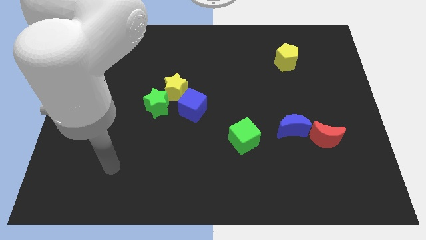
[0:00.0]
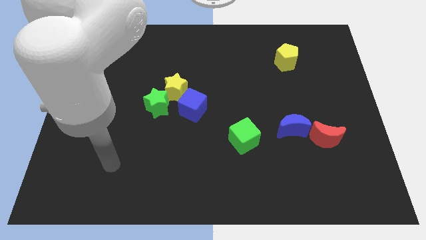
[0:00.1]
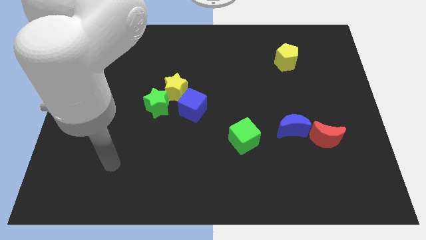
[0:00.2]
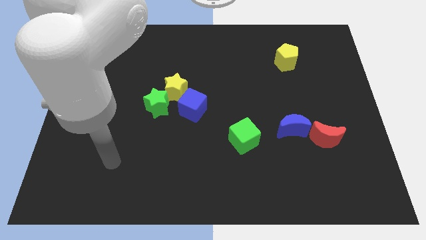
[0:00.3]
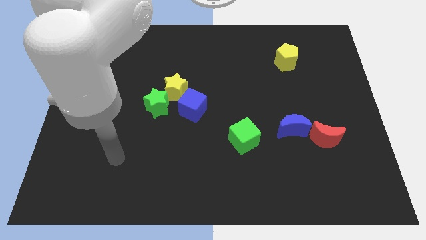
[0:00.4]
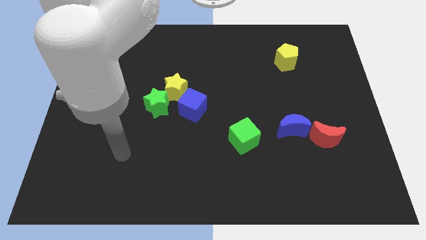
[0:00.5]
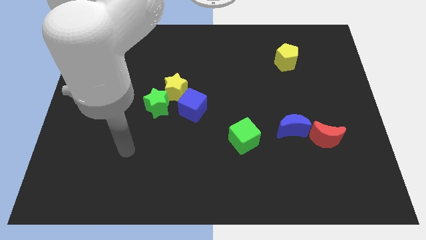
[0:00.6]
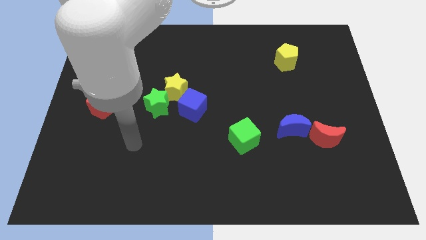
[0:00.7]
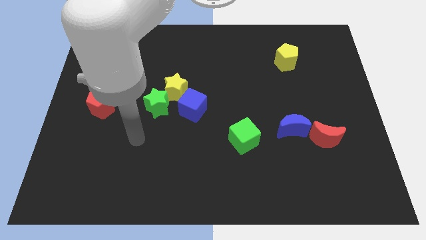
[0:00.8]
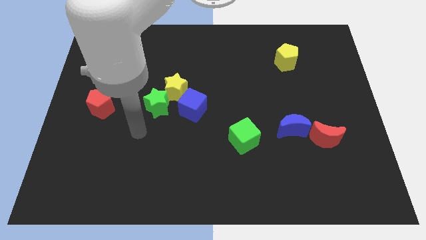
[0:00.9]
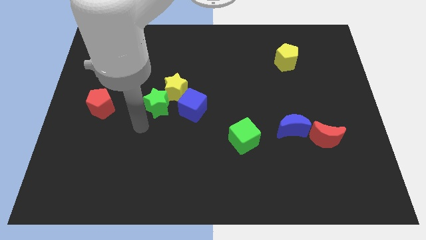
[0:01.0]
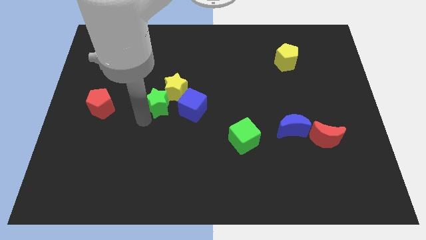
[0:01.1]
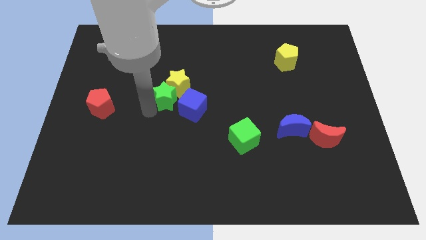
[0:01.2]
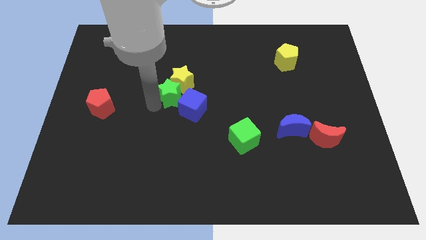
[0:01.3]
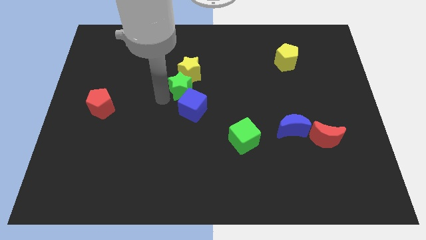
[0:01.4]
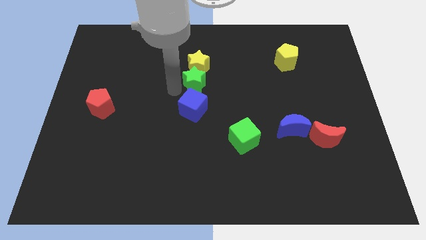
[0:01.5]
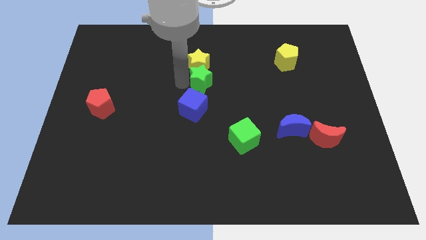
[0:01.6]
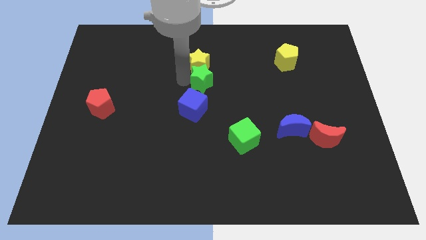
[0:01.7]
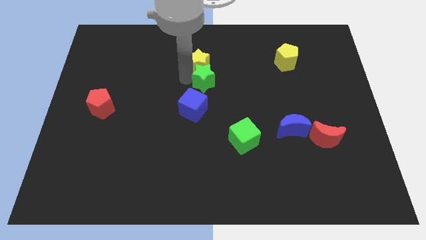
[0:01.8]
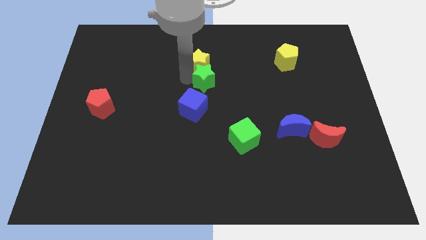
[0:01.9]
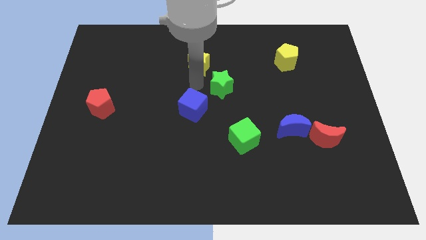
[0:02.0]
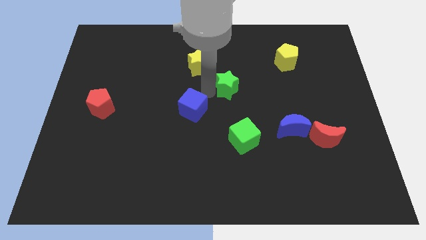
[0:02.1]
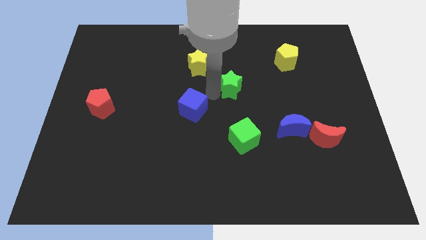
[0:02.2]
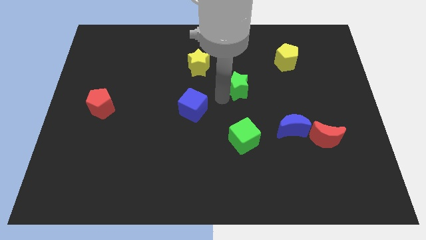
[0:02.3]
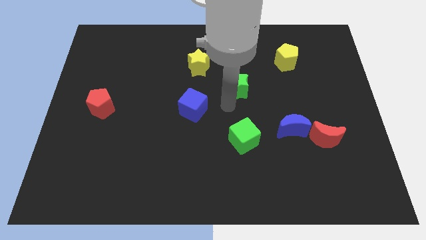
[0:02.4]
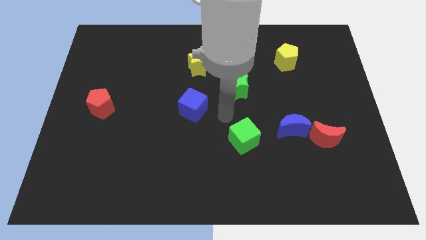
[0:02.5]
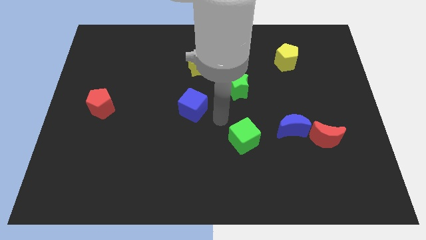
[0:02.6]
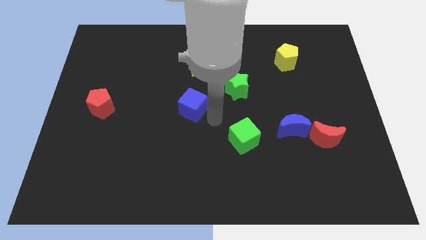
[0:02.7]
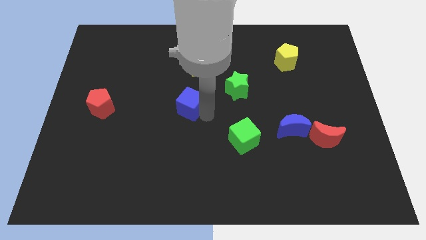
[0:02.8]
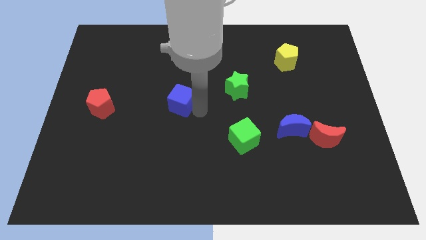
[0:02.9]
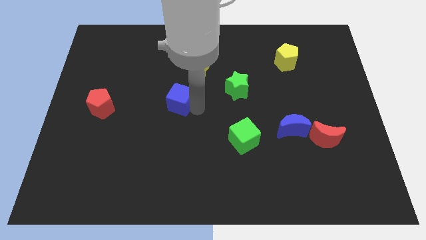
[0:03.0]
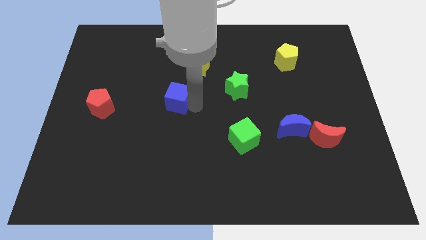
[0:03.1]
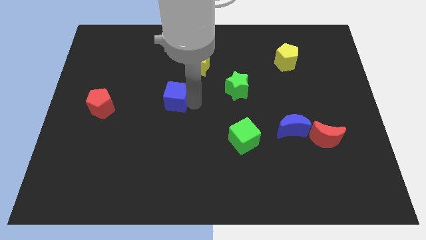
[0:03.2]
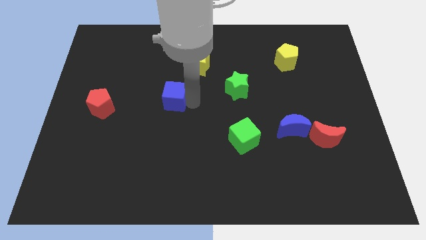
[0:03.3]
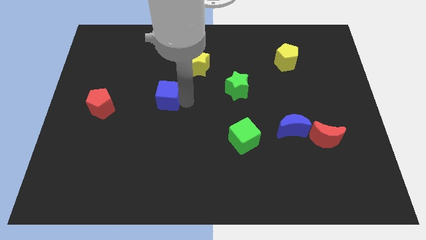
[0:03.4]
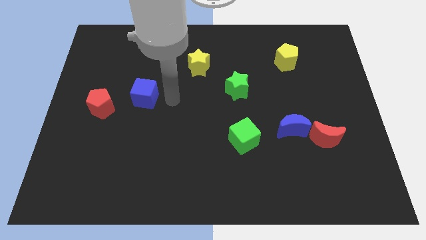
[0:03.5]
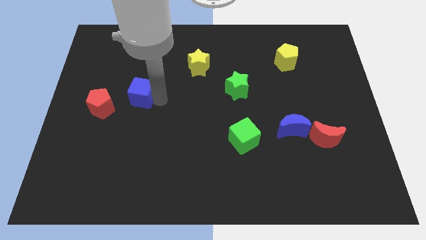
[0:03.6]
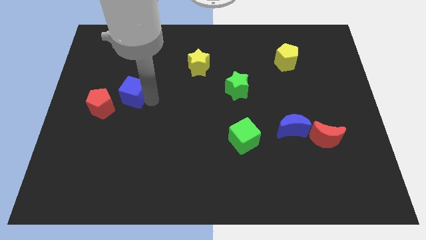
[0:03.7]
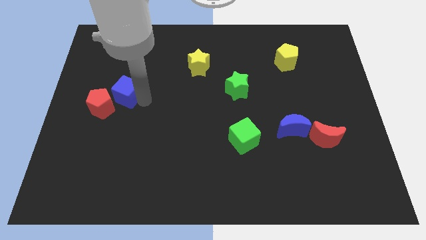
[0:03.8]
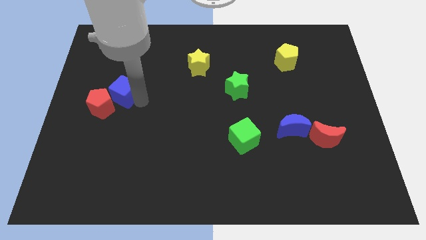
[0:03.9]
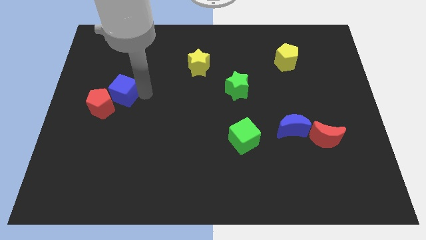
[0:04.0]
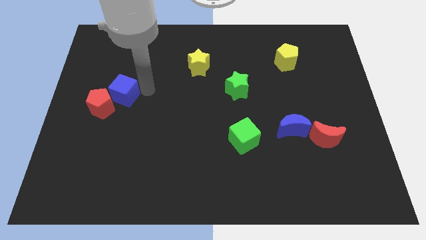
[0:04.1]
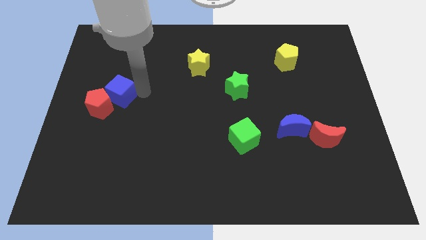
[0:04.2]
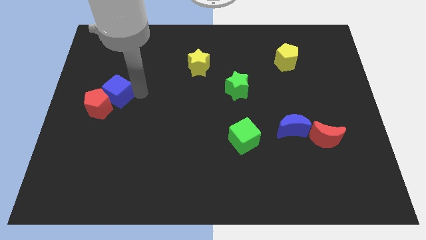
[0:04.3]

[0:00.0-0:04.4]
move the blue cube towards the red pentagon

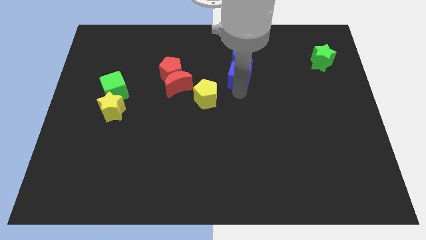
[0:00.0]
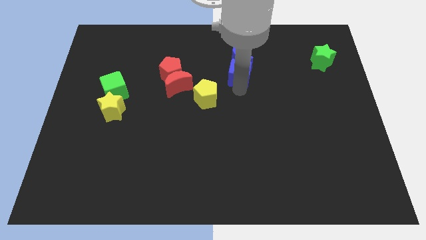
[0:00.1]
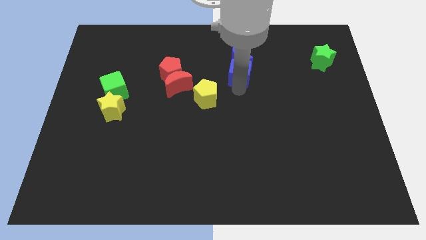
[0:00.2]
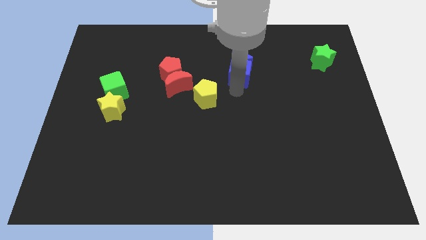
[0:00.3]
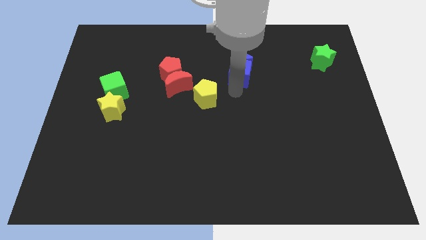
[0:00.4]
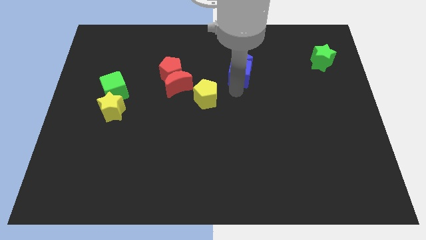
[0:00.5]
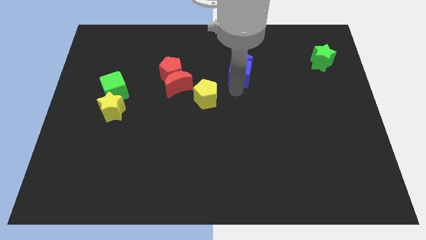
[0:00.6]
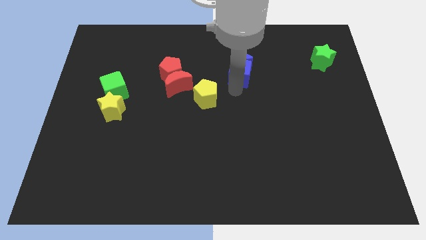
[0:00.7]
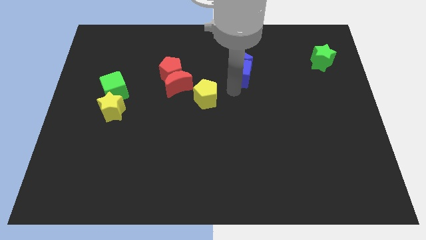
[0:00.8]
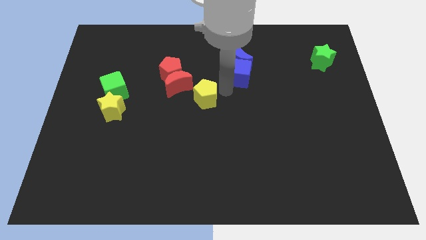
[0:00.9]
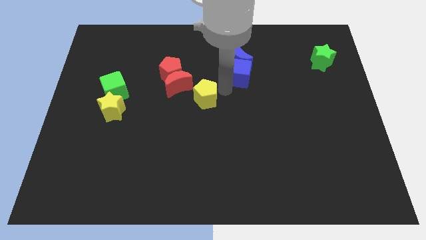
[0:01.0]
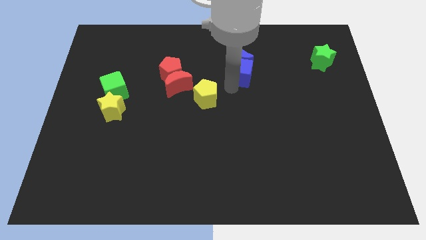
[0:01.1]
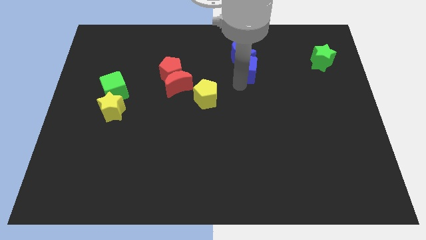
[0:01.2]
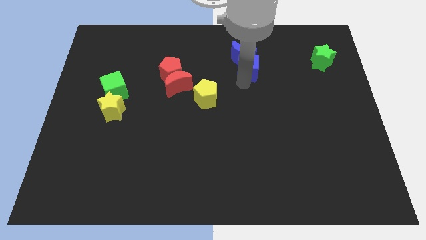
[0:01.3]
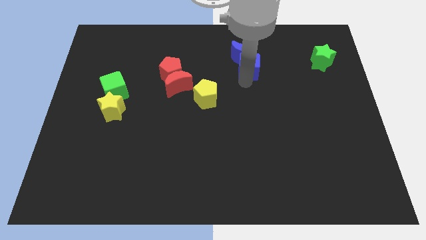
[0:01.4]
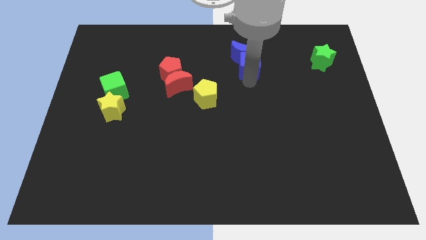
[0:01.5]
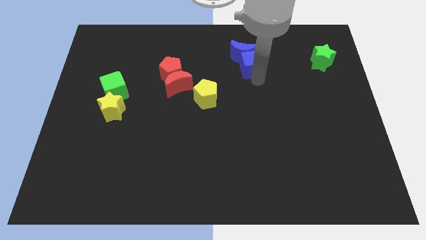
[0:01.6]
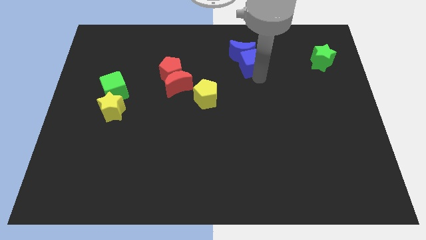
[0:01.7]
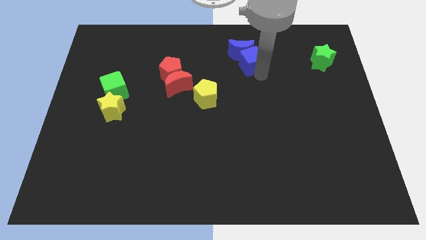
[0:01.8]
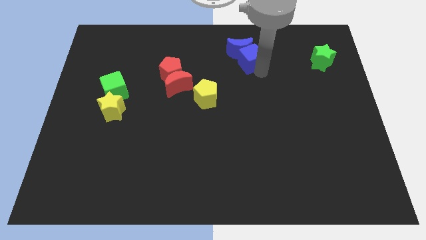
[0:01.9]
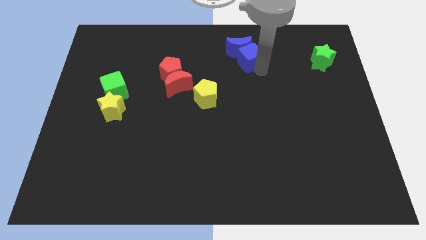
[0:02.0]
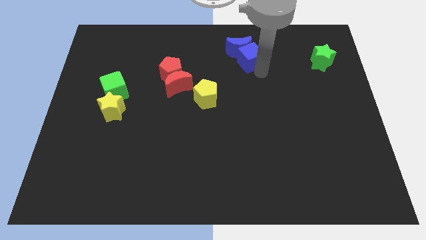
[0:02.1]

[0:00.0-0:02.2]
push the blue blocks upwards

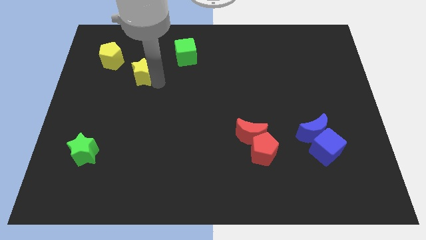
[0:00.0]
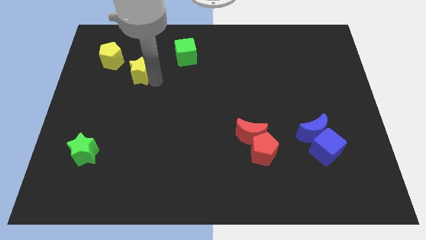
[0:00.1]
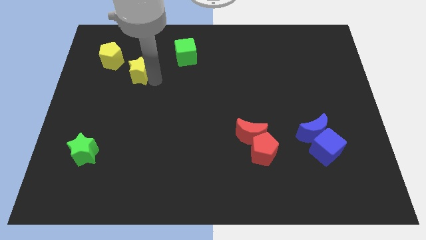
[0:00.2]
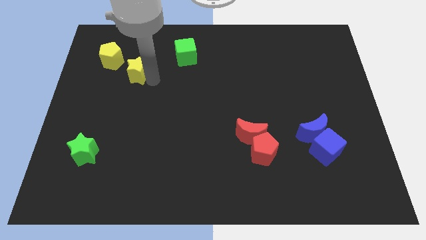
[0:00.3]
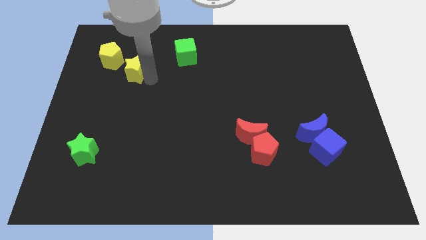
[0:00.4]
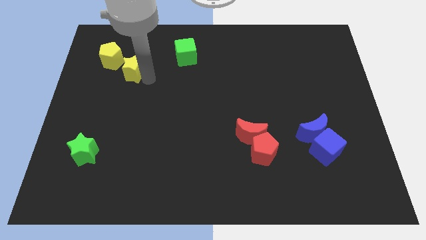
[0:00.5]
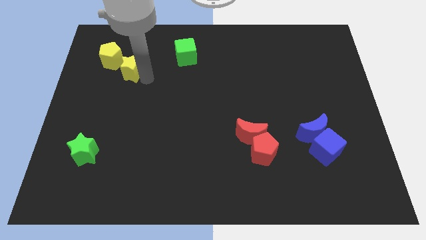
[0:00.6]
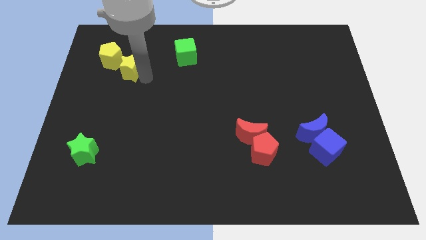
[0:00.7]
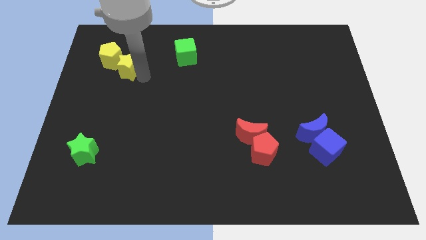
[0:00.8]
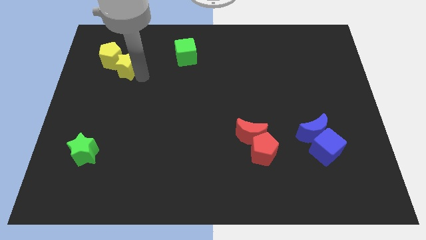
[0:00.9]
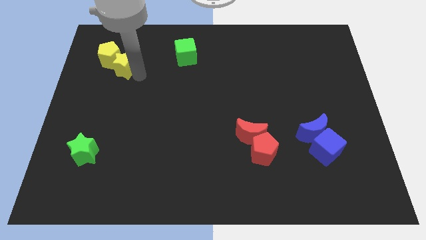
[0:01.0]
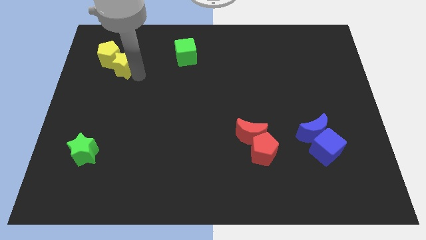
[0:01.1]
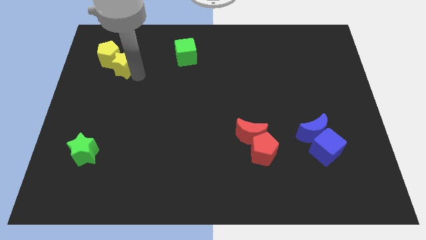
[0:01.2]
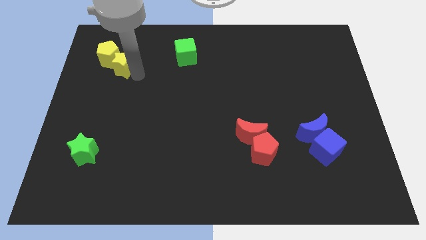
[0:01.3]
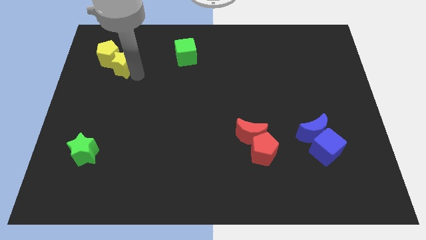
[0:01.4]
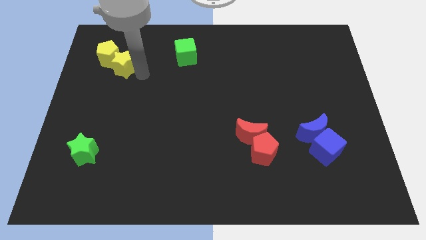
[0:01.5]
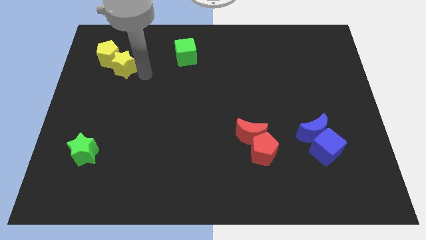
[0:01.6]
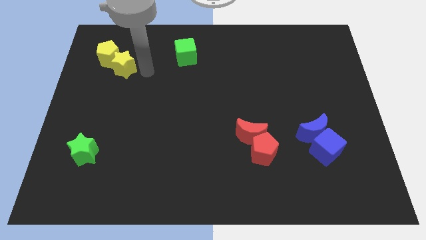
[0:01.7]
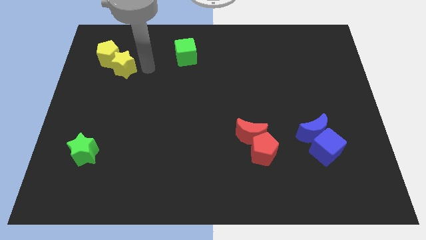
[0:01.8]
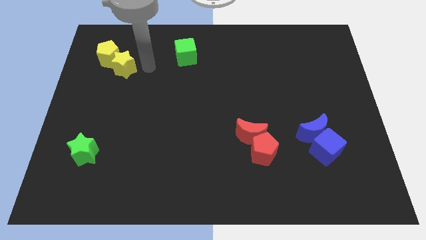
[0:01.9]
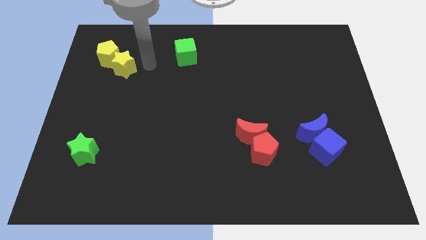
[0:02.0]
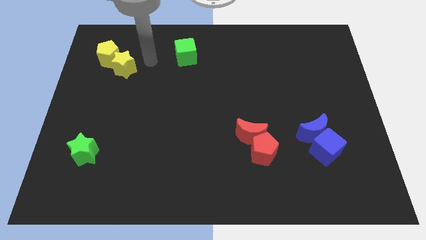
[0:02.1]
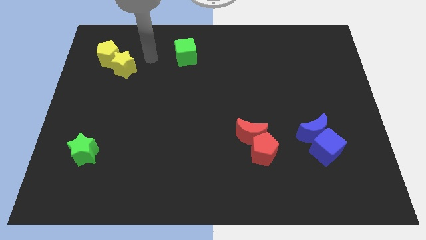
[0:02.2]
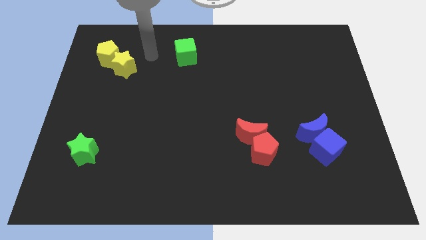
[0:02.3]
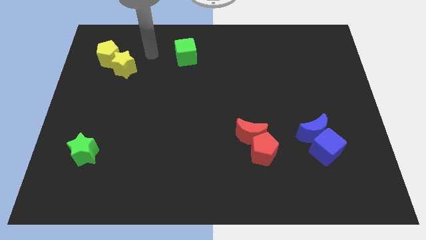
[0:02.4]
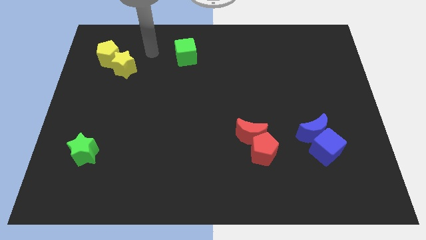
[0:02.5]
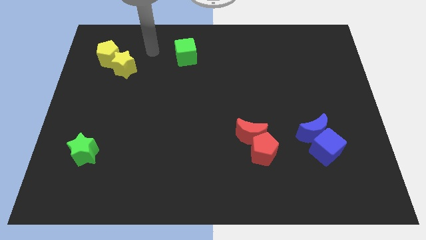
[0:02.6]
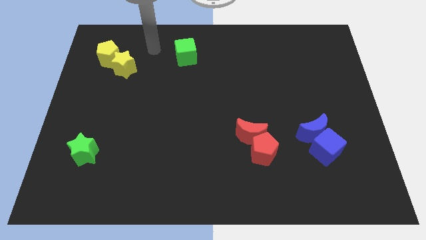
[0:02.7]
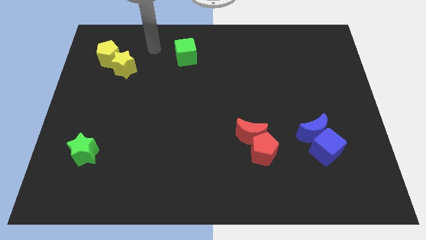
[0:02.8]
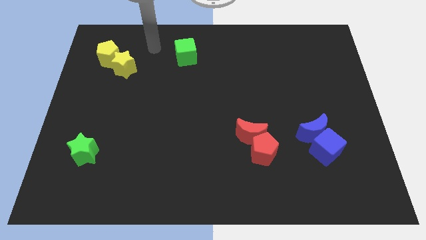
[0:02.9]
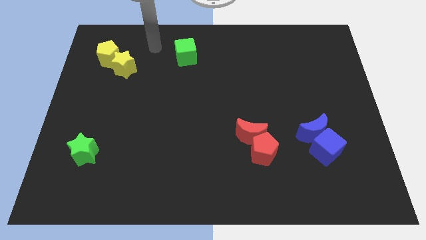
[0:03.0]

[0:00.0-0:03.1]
push the yellow star into the yellow pentagon
